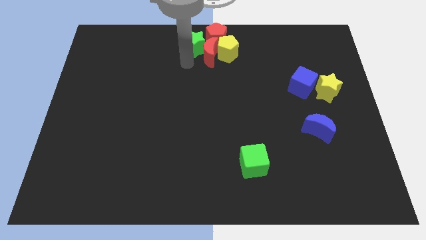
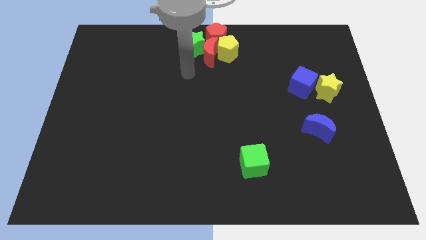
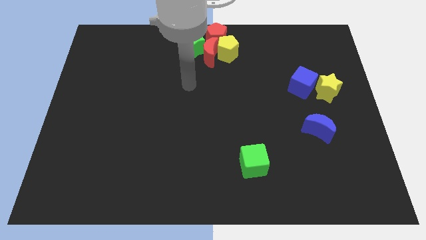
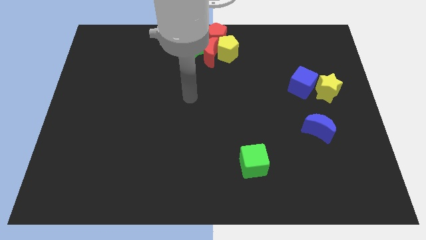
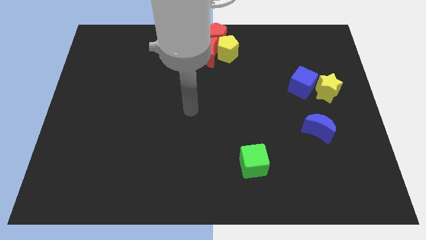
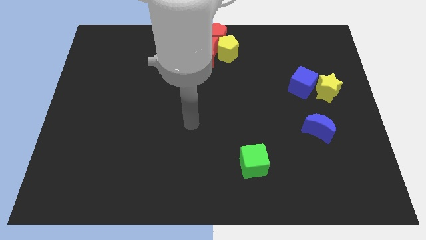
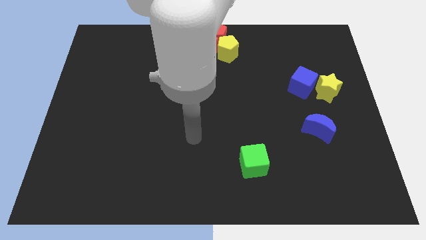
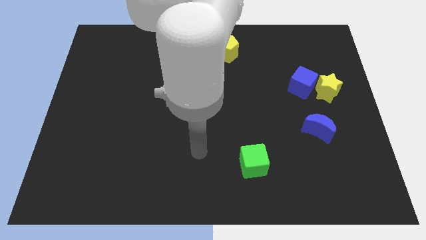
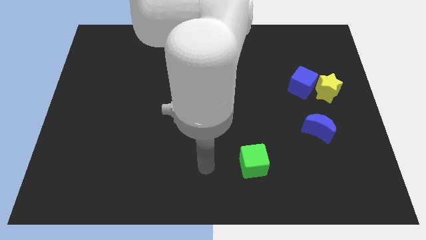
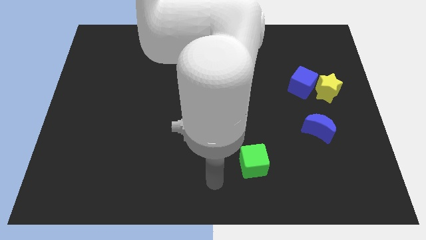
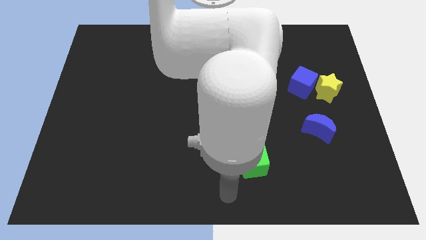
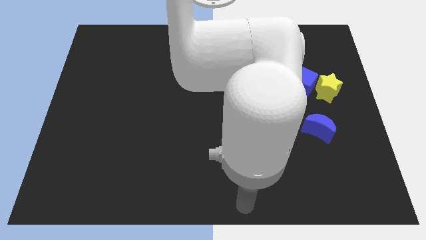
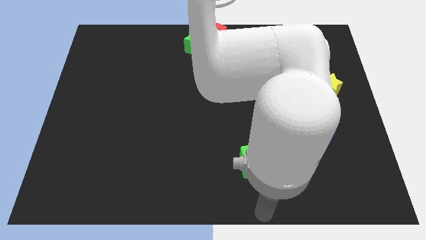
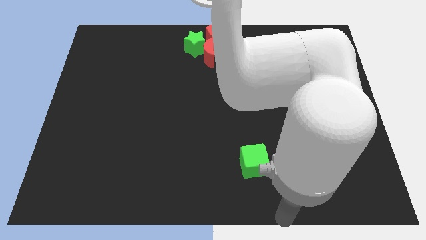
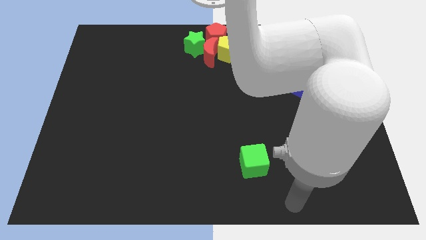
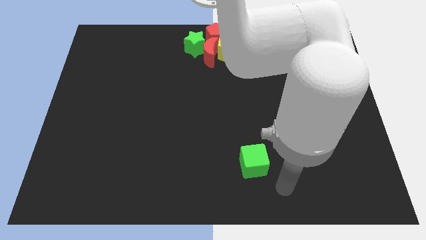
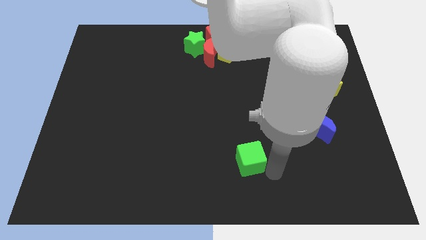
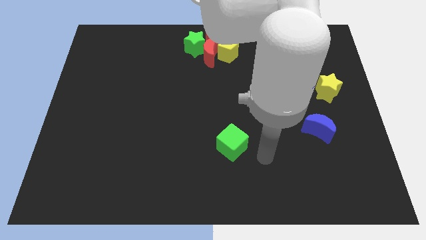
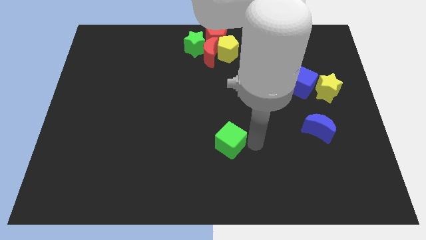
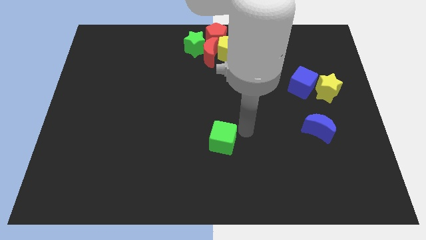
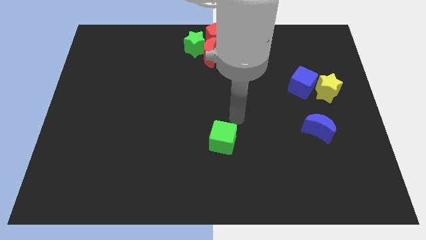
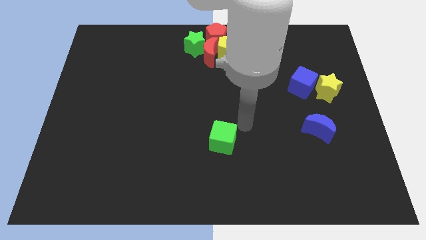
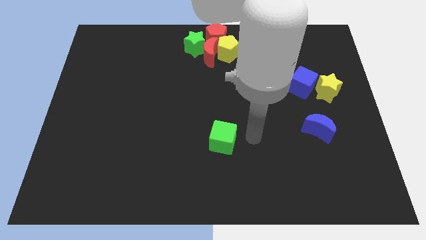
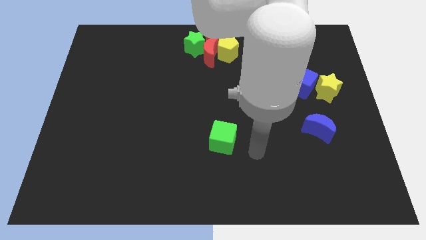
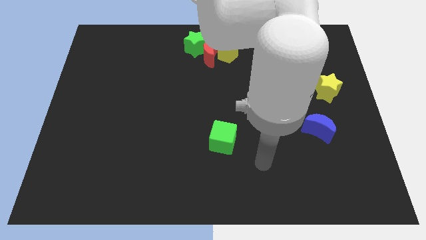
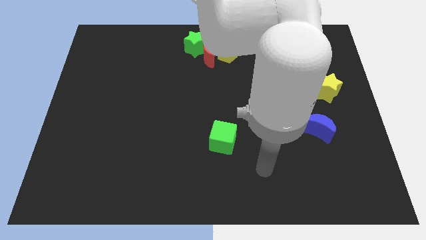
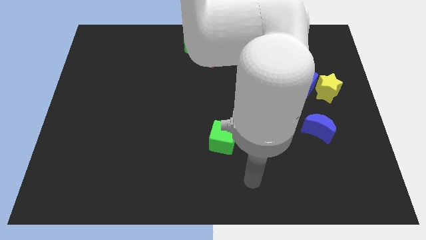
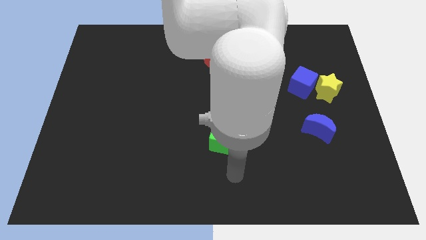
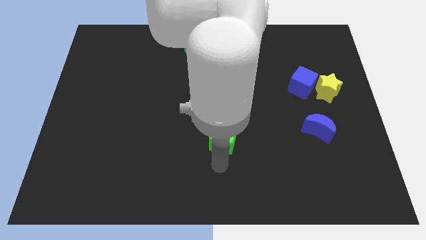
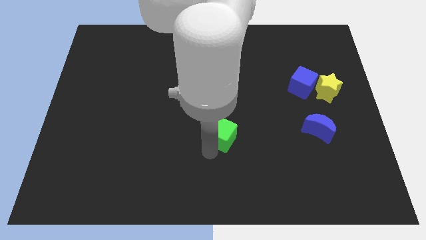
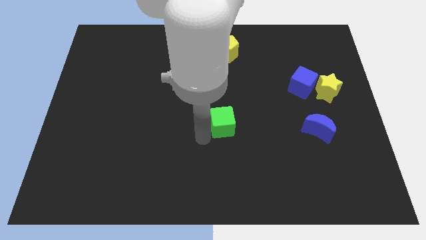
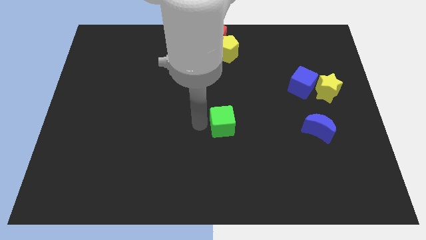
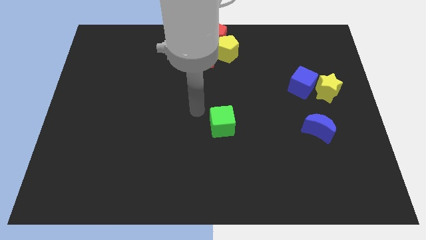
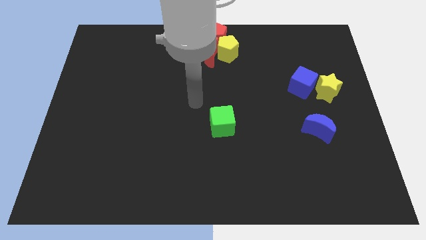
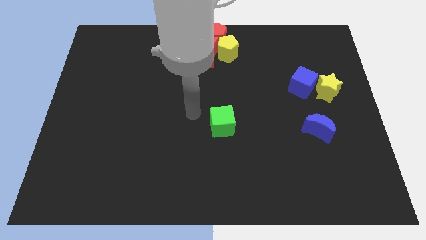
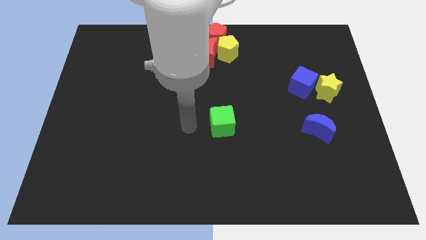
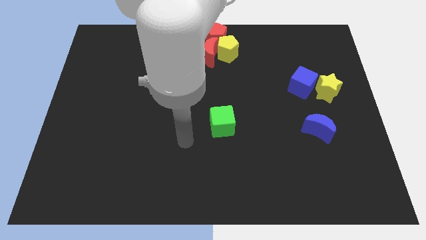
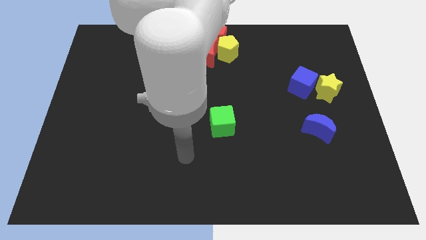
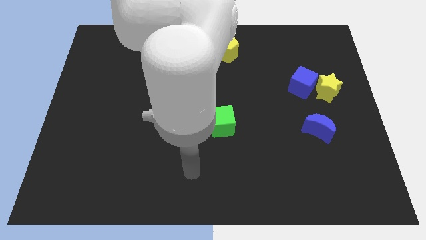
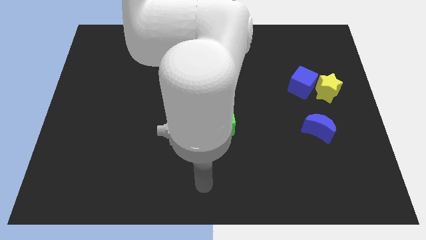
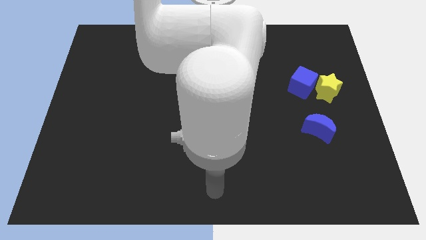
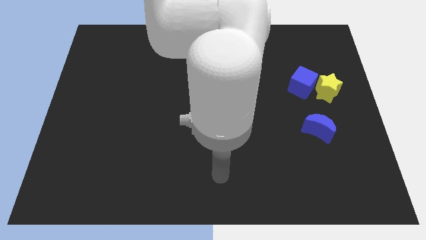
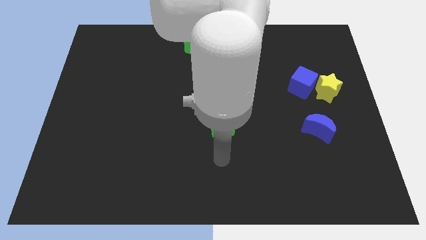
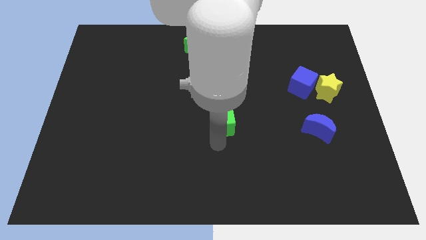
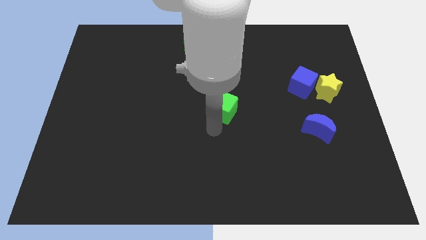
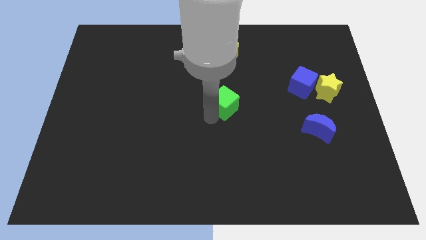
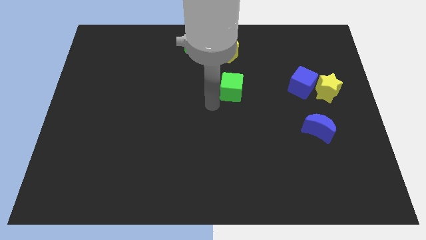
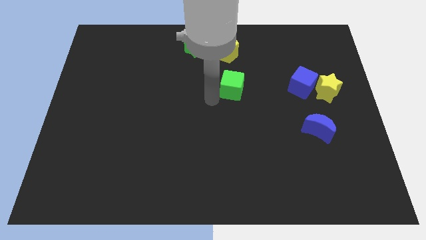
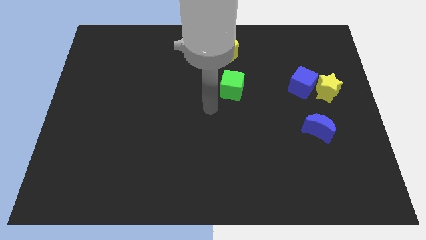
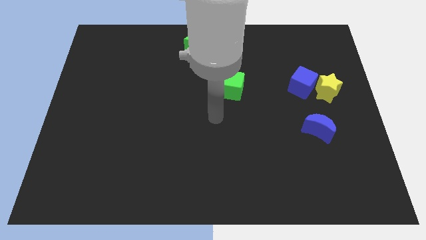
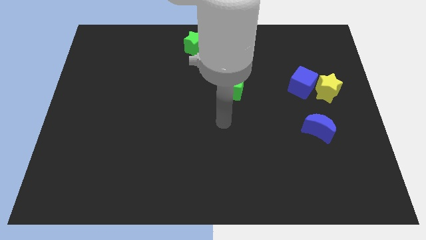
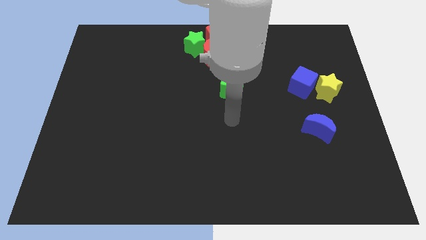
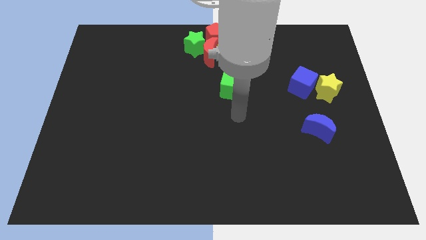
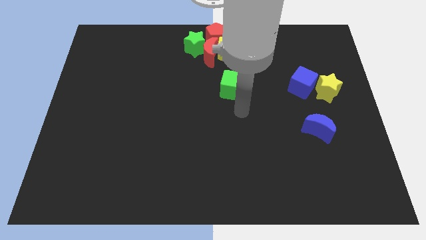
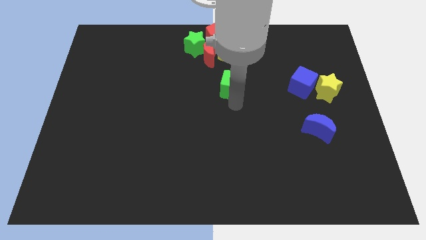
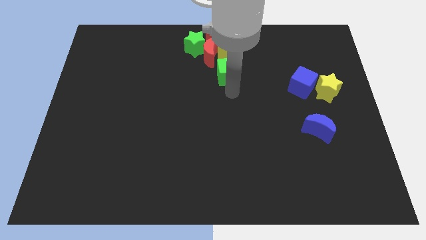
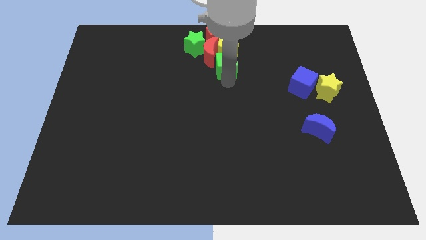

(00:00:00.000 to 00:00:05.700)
push the green cube to the bottom of the yellow pentagon

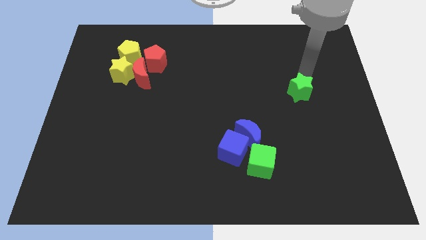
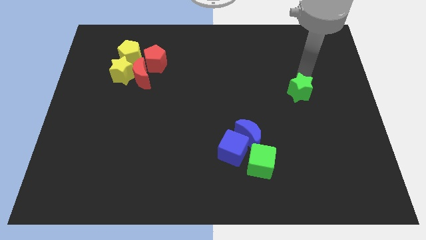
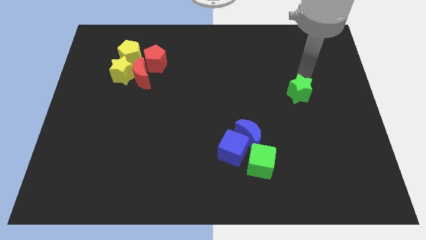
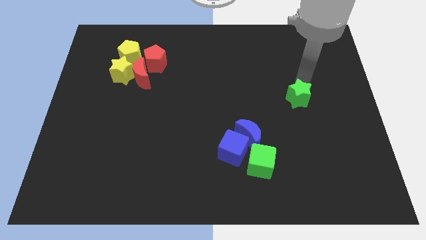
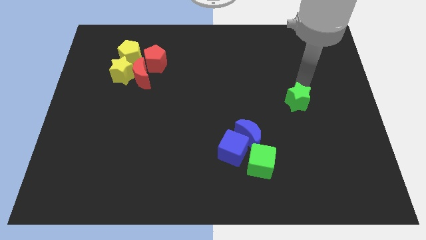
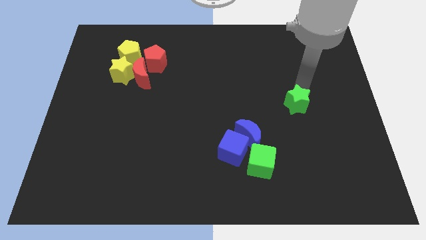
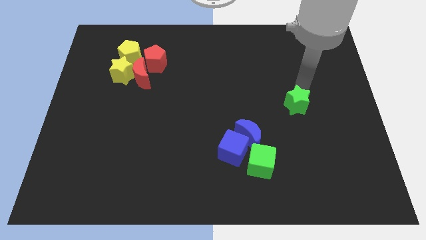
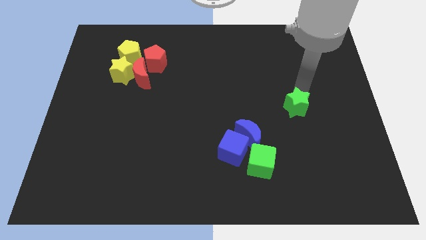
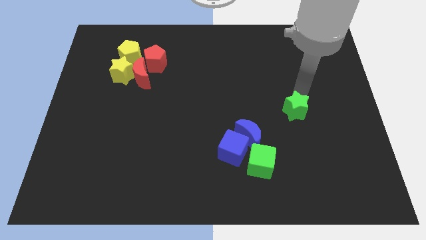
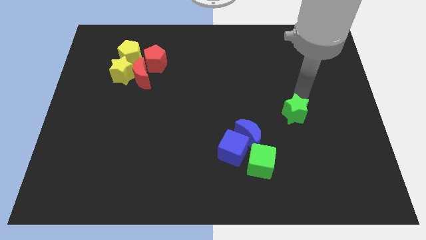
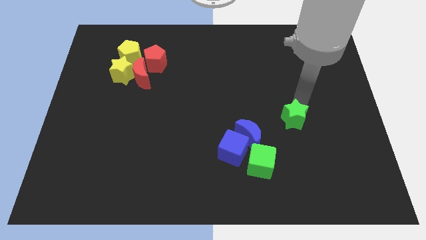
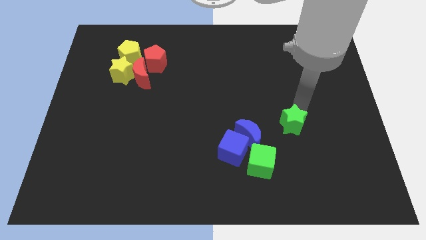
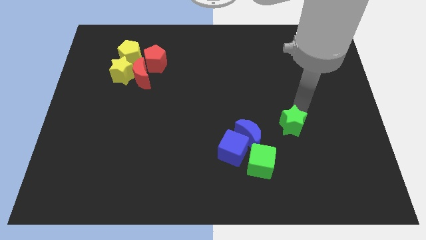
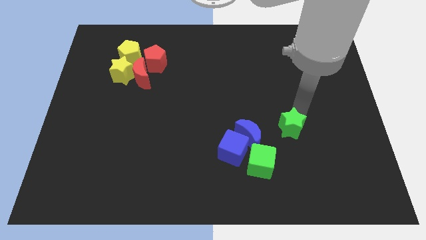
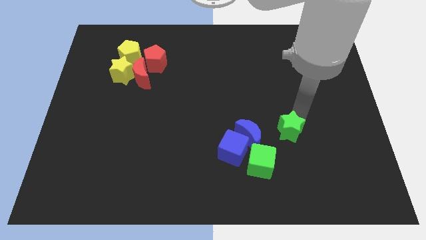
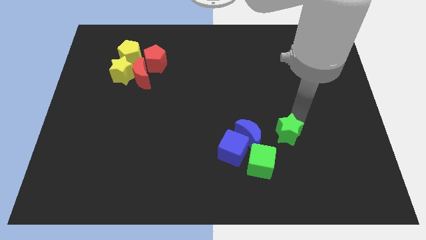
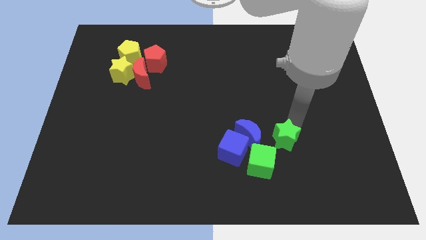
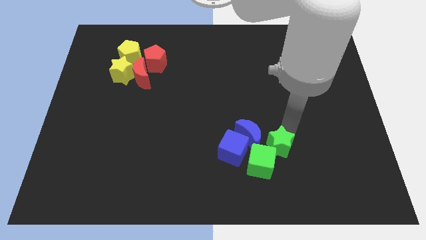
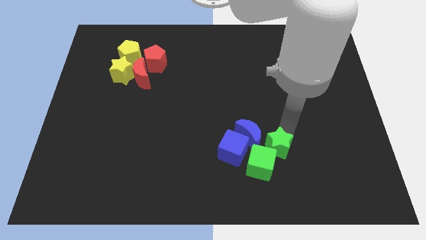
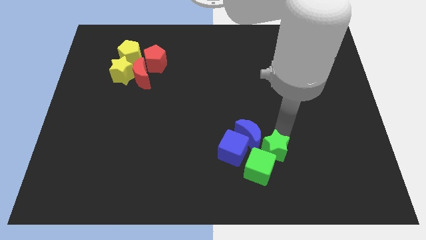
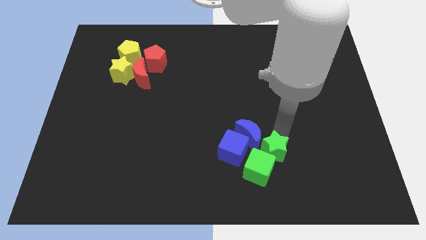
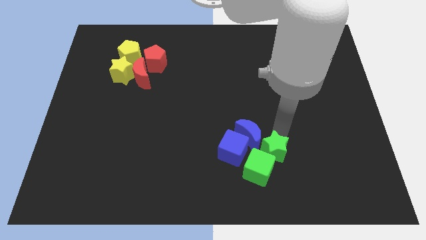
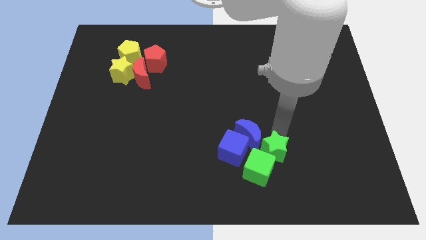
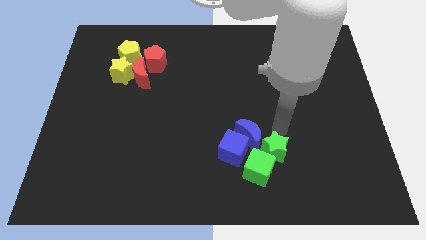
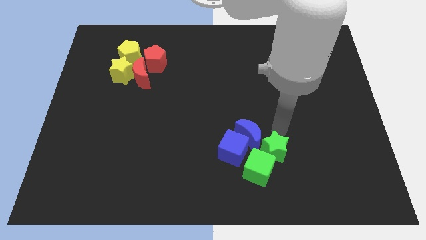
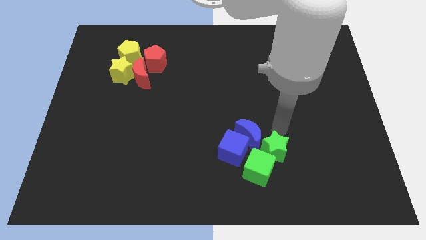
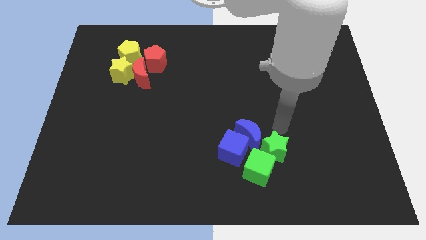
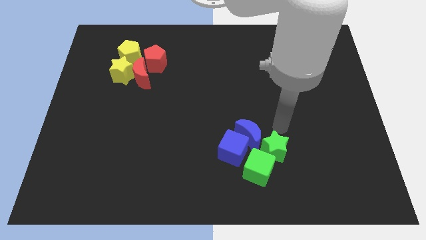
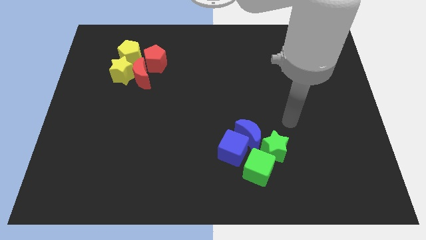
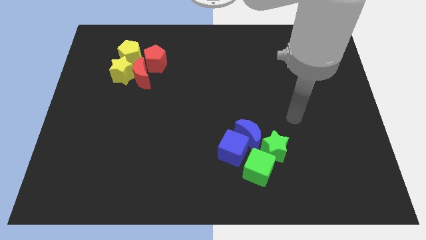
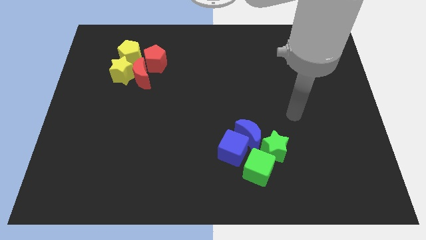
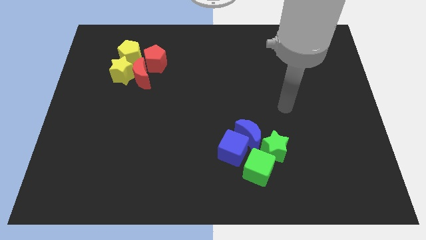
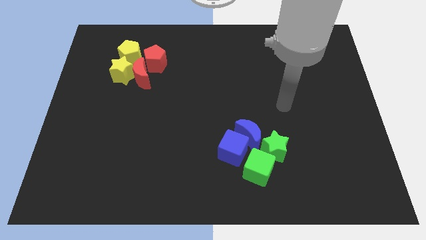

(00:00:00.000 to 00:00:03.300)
move the green star to the right of the blue crescent
